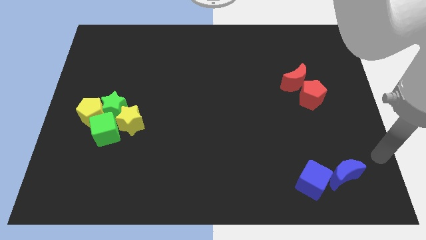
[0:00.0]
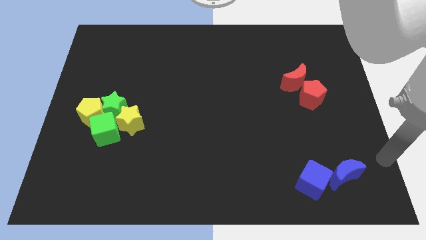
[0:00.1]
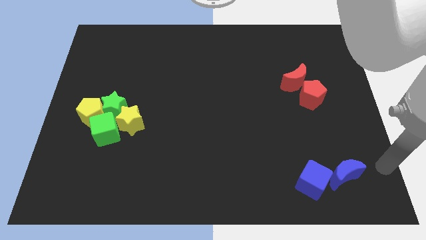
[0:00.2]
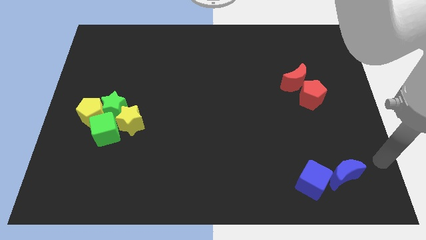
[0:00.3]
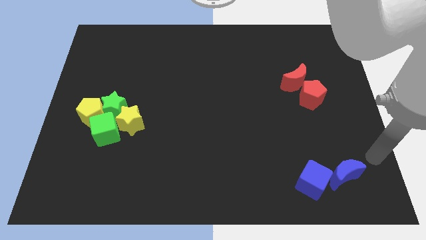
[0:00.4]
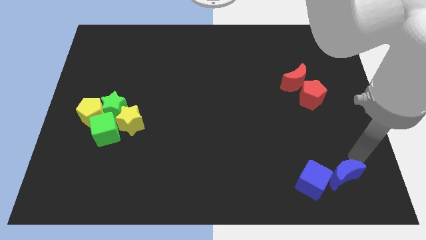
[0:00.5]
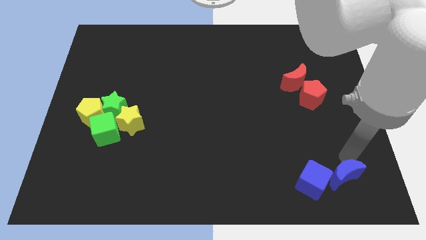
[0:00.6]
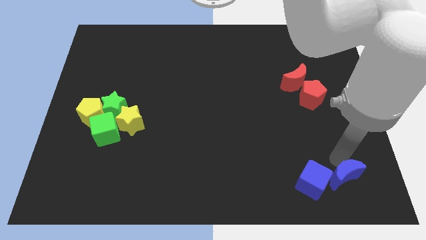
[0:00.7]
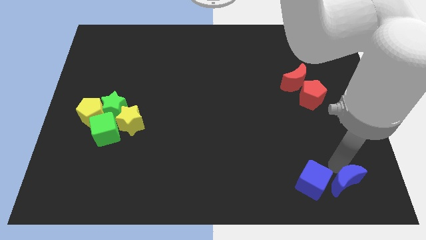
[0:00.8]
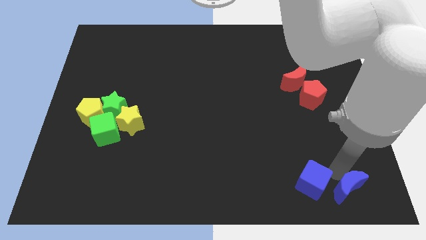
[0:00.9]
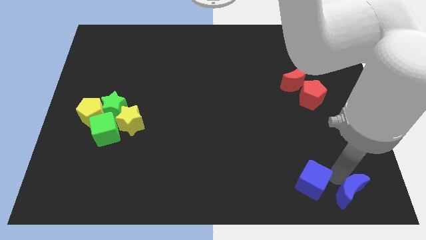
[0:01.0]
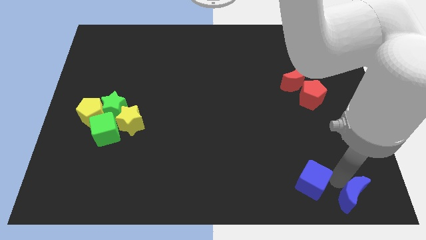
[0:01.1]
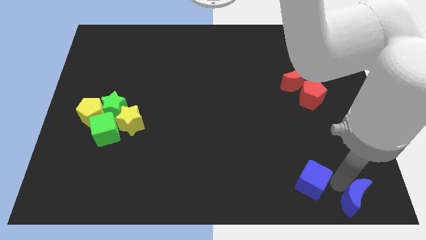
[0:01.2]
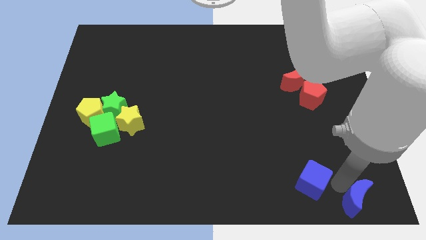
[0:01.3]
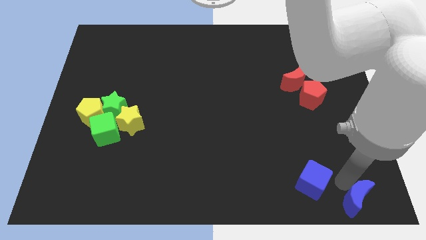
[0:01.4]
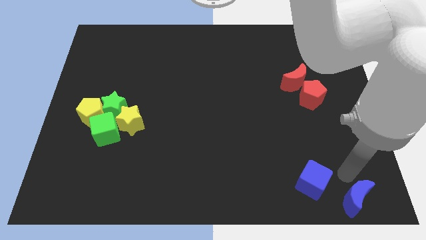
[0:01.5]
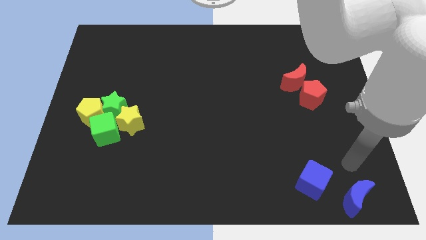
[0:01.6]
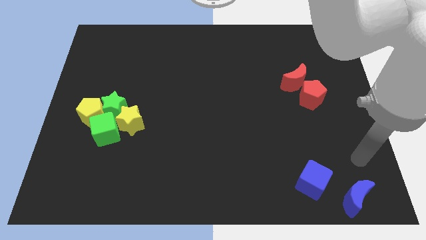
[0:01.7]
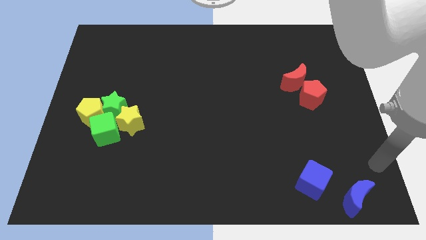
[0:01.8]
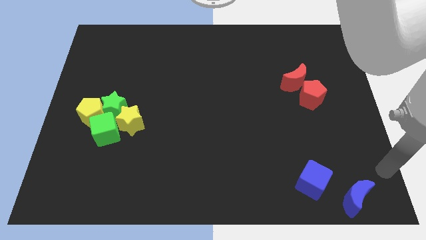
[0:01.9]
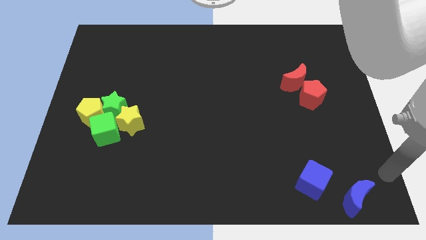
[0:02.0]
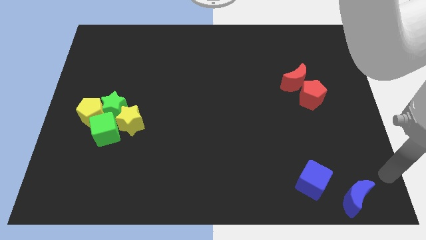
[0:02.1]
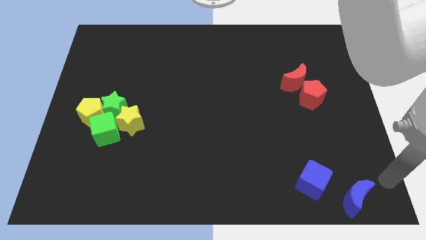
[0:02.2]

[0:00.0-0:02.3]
move the blue moon slightly towards the bottom right of the board

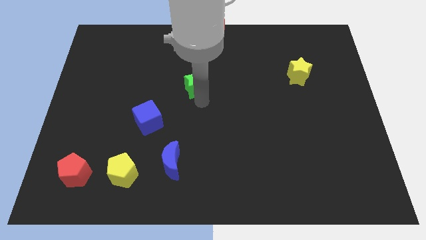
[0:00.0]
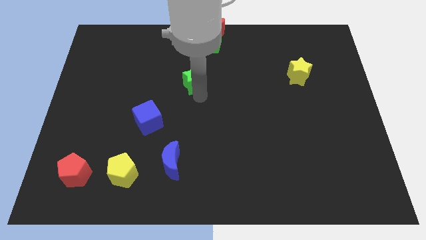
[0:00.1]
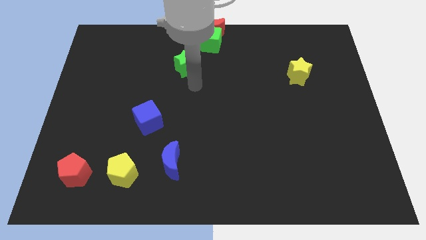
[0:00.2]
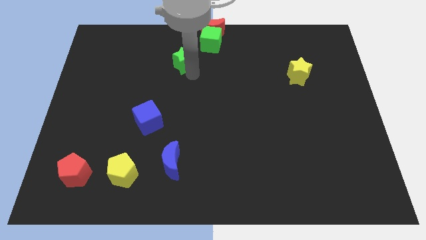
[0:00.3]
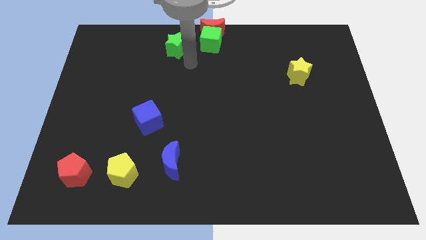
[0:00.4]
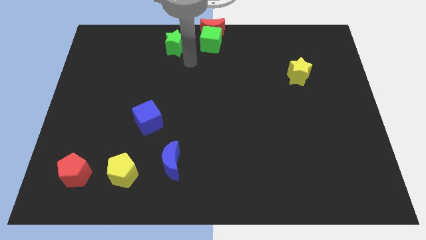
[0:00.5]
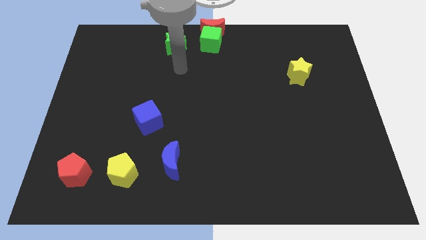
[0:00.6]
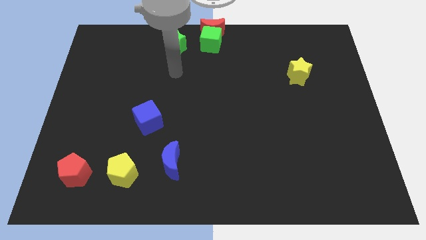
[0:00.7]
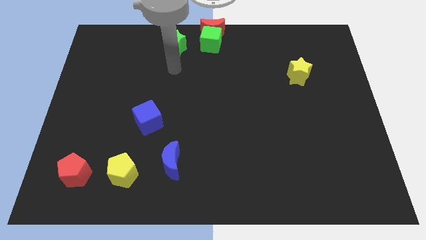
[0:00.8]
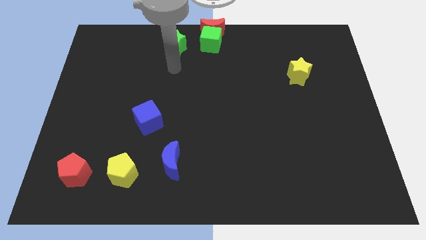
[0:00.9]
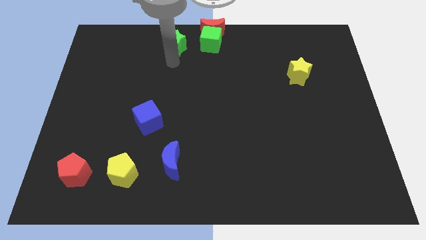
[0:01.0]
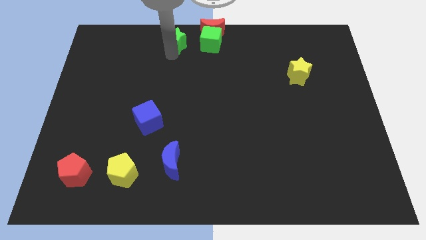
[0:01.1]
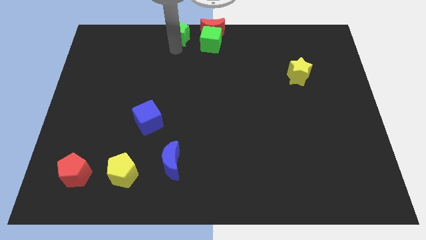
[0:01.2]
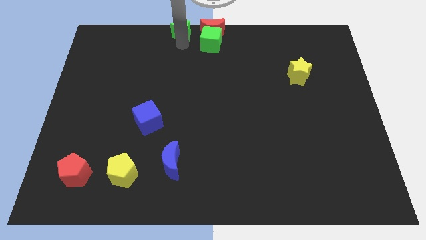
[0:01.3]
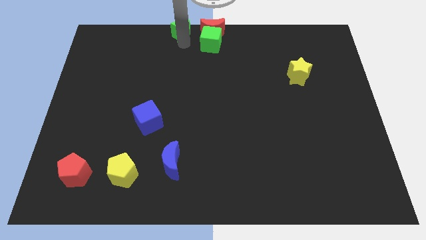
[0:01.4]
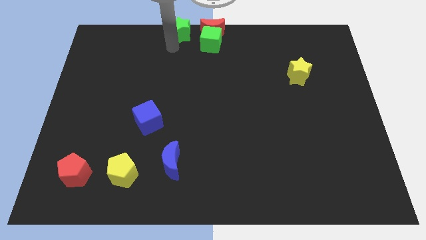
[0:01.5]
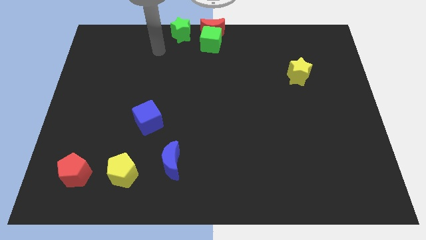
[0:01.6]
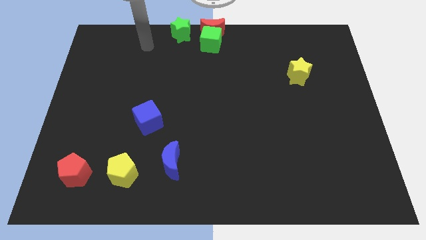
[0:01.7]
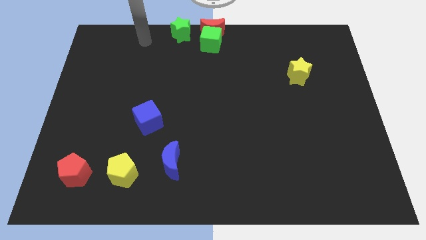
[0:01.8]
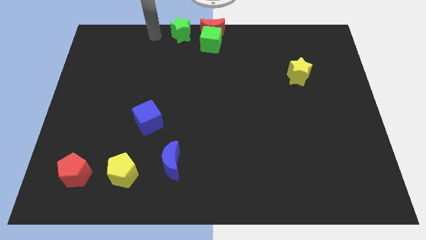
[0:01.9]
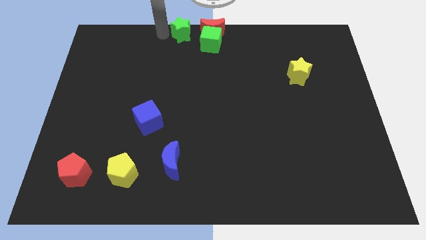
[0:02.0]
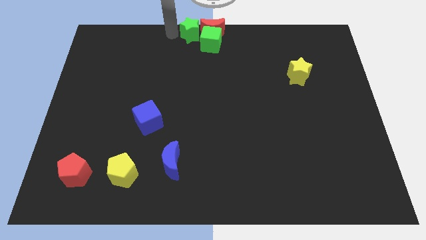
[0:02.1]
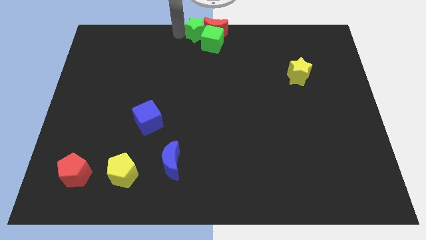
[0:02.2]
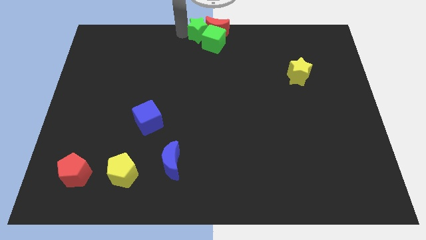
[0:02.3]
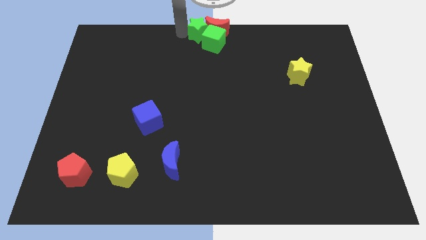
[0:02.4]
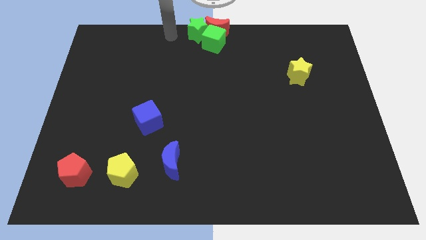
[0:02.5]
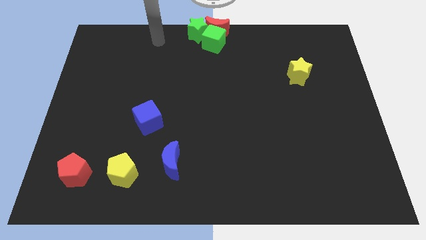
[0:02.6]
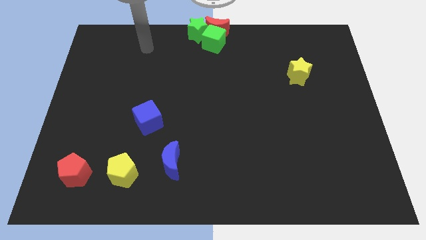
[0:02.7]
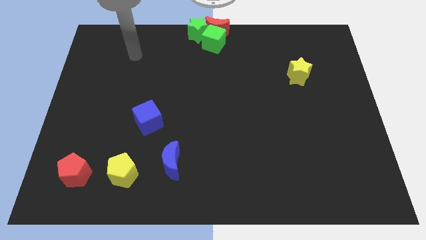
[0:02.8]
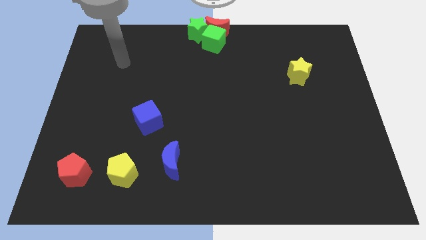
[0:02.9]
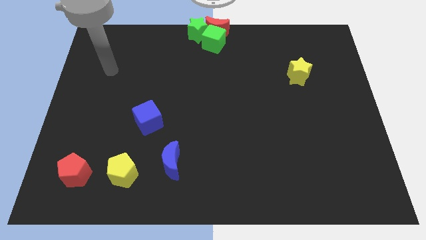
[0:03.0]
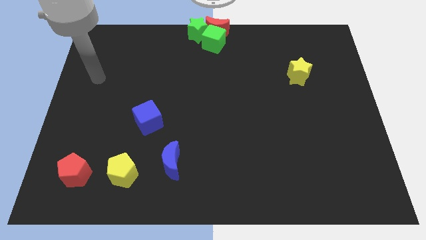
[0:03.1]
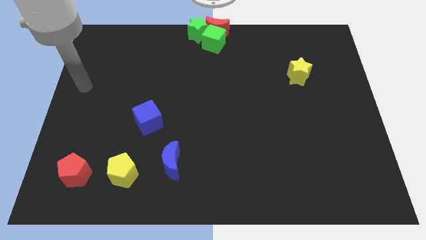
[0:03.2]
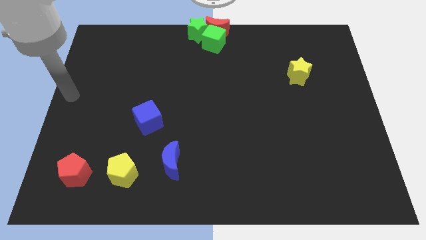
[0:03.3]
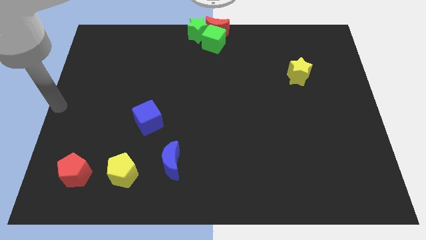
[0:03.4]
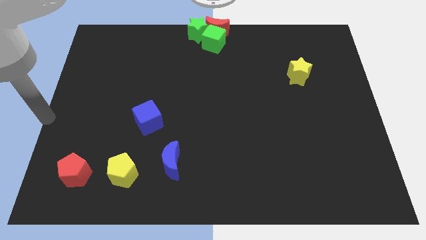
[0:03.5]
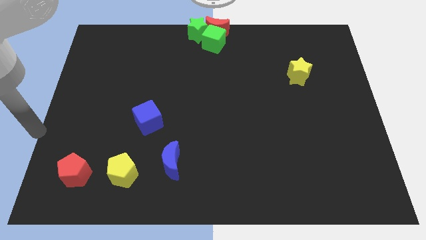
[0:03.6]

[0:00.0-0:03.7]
push green star into the red moon

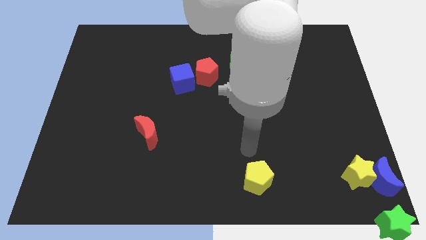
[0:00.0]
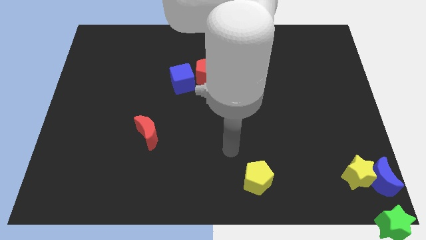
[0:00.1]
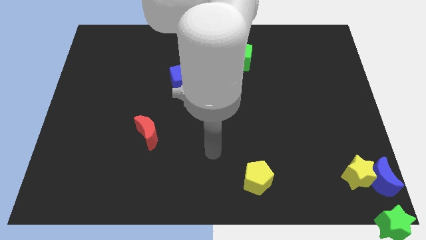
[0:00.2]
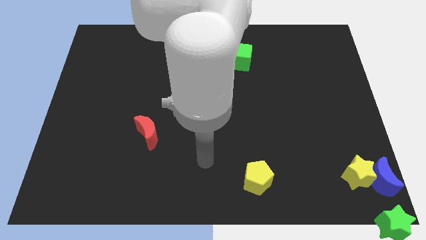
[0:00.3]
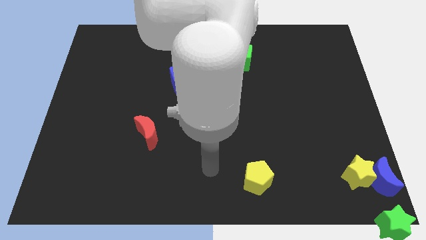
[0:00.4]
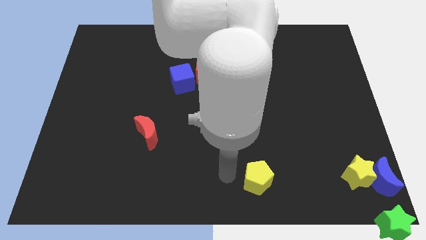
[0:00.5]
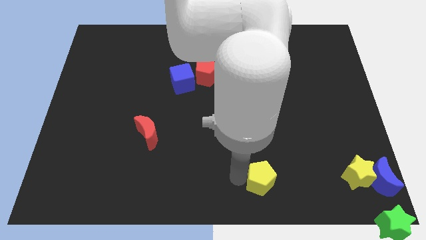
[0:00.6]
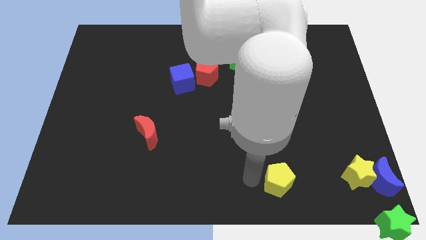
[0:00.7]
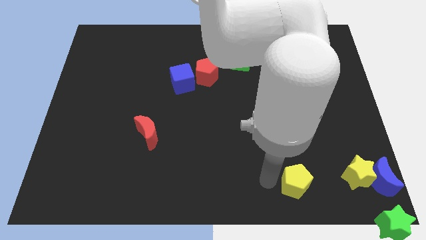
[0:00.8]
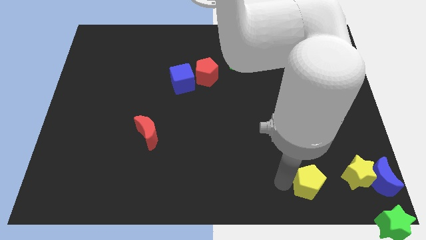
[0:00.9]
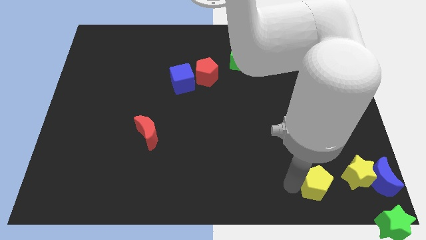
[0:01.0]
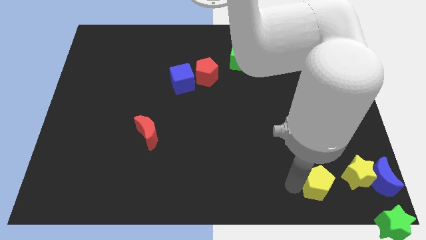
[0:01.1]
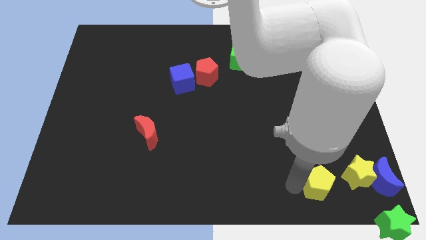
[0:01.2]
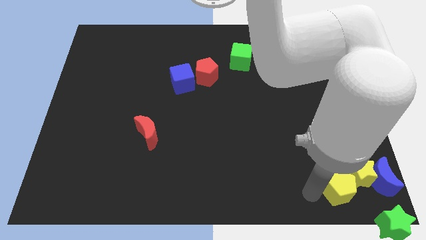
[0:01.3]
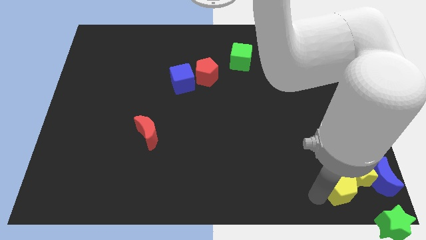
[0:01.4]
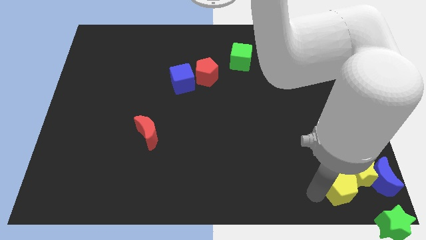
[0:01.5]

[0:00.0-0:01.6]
push the yellow pentagon towards the bottom right

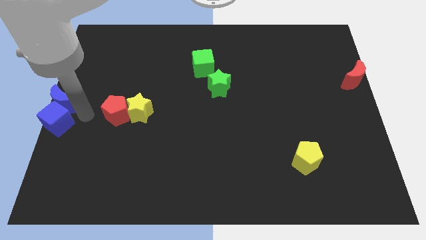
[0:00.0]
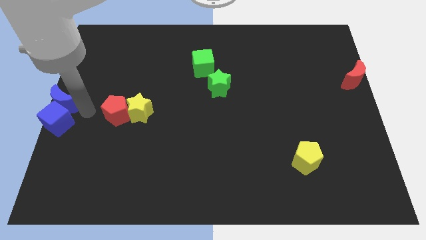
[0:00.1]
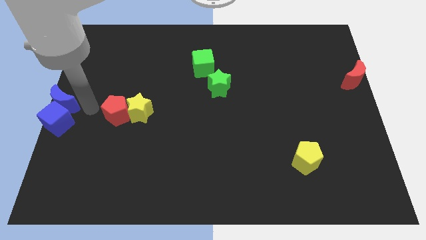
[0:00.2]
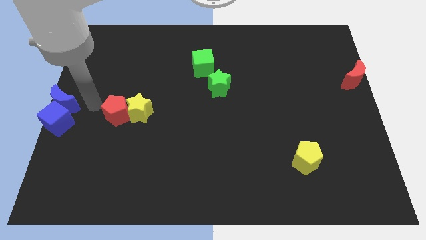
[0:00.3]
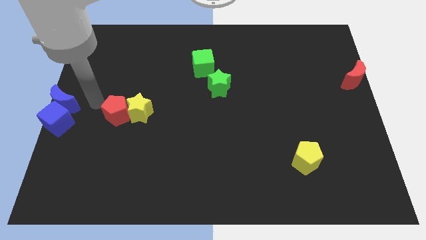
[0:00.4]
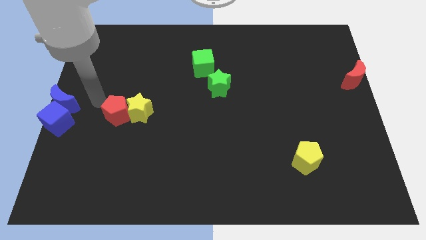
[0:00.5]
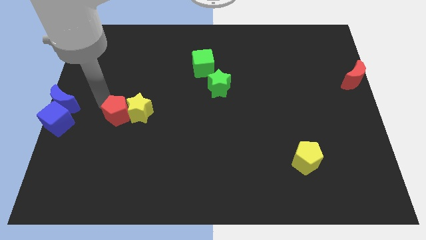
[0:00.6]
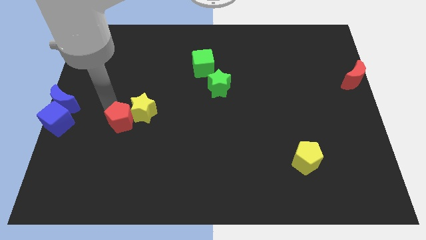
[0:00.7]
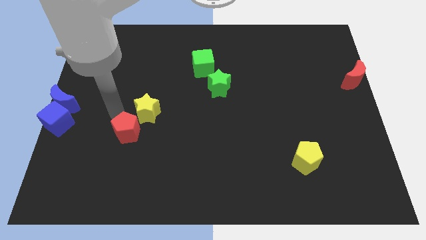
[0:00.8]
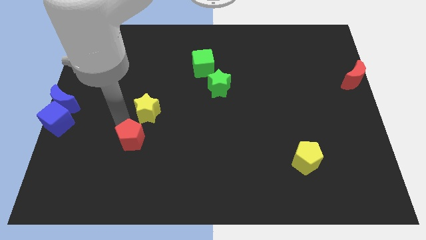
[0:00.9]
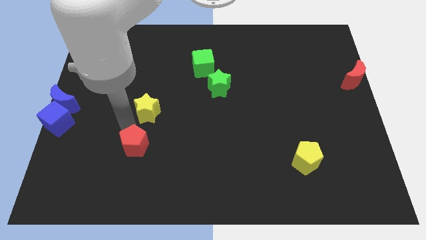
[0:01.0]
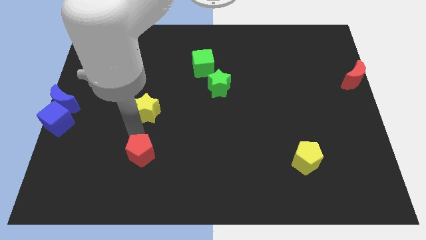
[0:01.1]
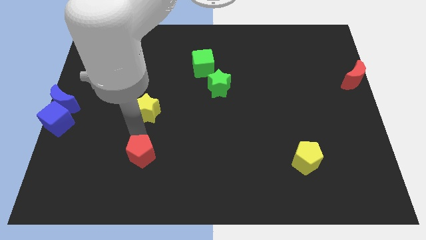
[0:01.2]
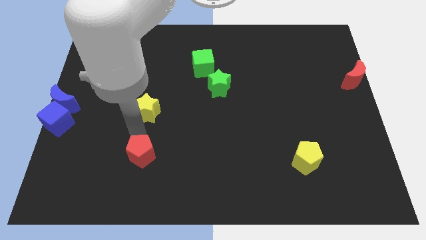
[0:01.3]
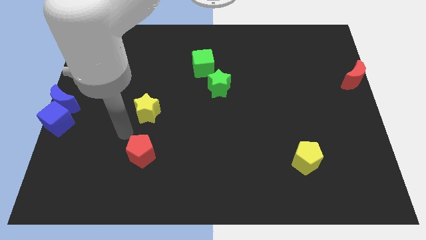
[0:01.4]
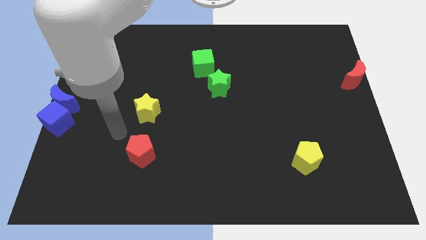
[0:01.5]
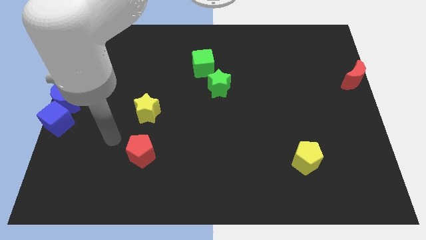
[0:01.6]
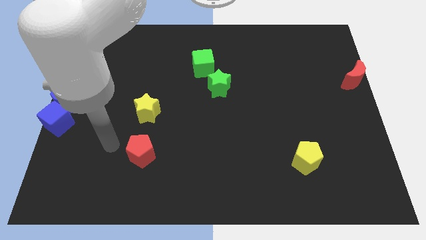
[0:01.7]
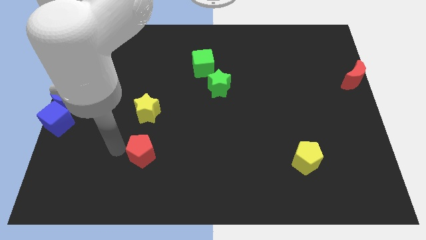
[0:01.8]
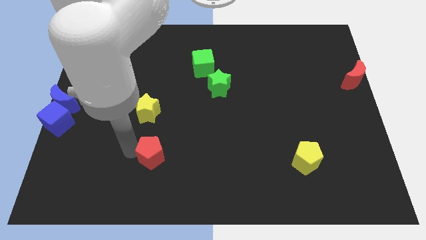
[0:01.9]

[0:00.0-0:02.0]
push the red pentagon away from the yellow star
